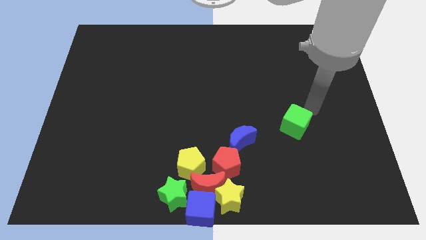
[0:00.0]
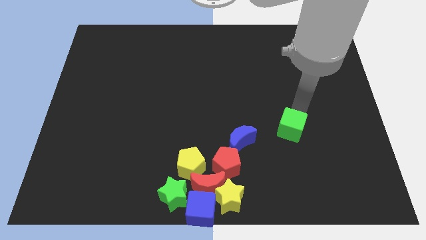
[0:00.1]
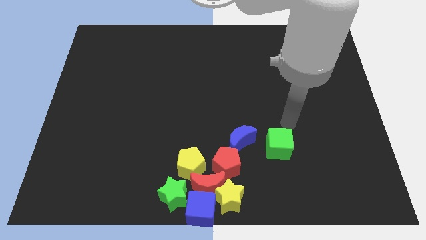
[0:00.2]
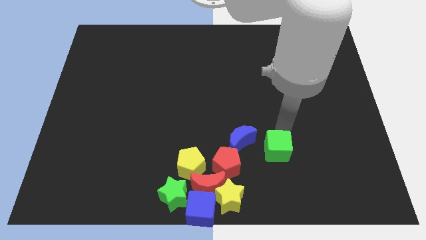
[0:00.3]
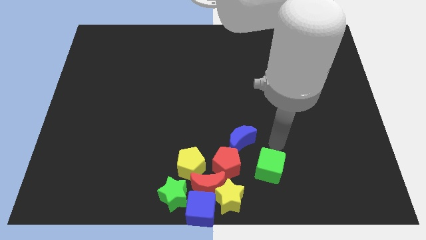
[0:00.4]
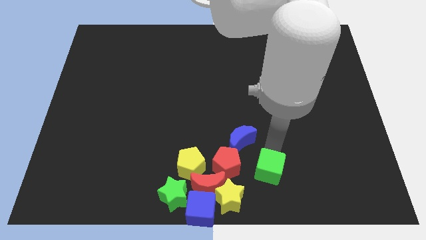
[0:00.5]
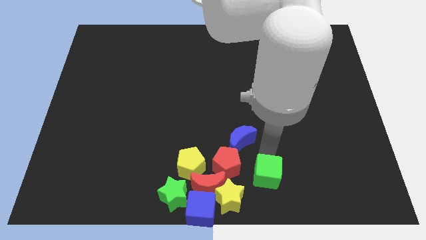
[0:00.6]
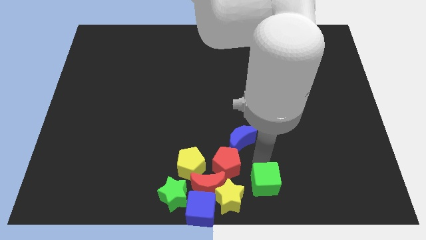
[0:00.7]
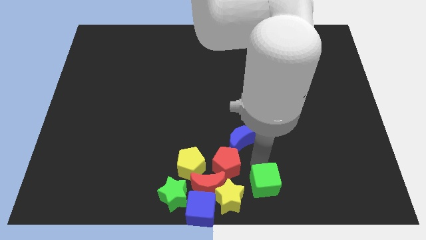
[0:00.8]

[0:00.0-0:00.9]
place green cube below blue crescent

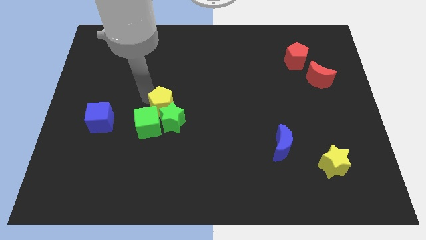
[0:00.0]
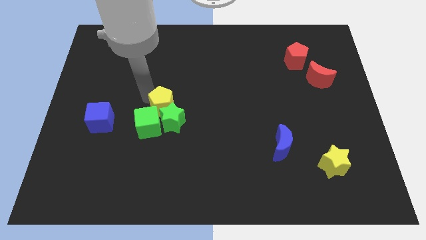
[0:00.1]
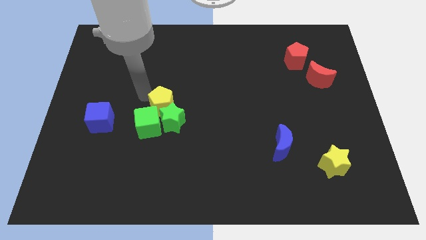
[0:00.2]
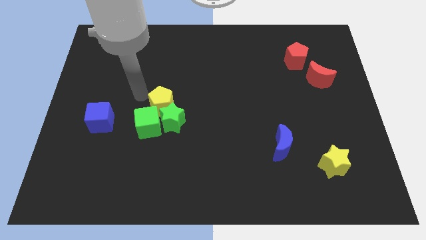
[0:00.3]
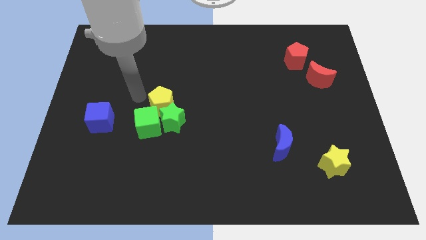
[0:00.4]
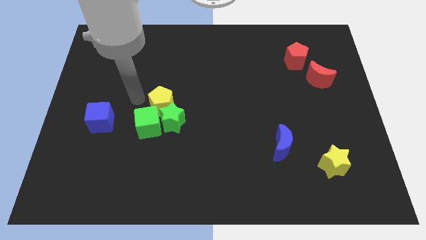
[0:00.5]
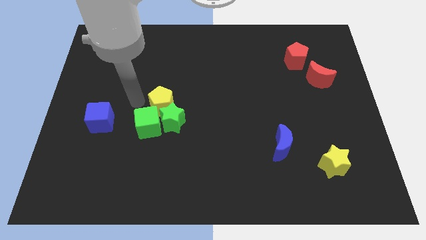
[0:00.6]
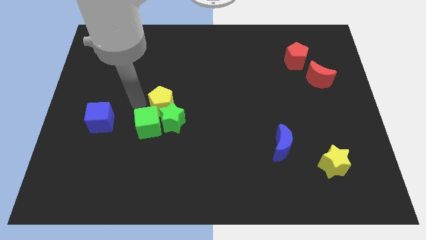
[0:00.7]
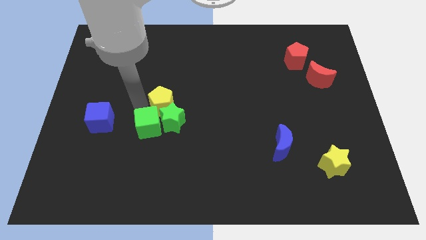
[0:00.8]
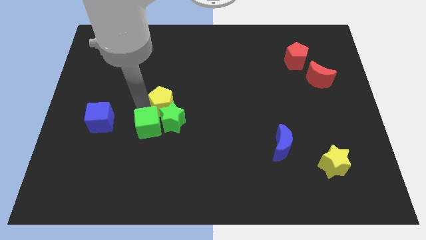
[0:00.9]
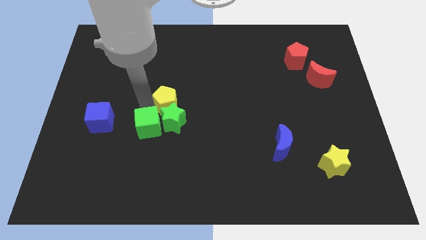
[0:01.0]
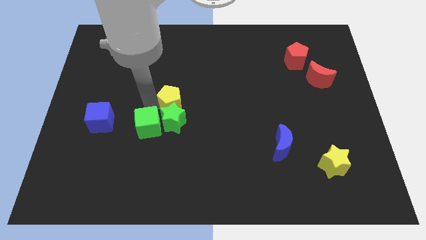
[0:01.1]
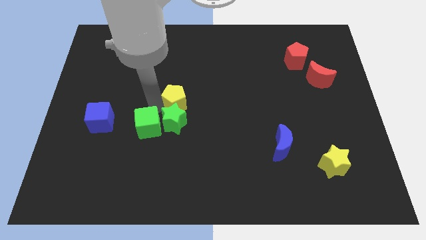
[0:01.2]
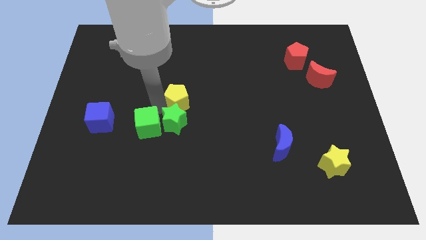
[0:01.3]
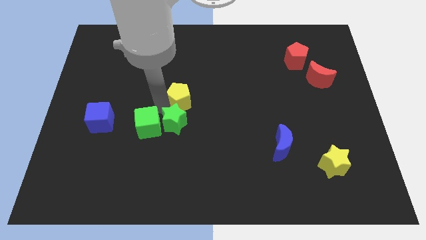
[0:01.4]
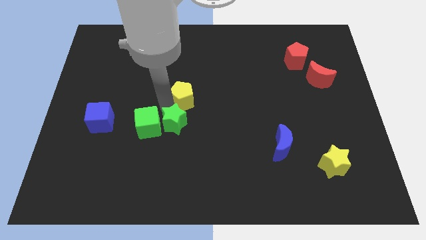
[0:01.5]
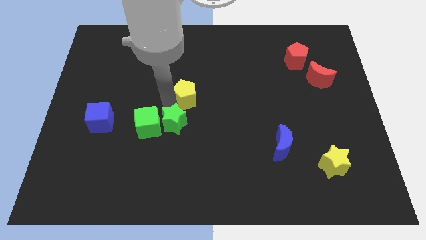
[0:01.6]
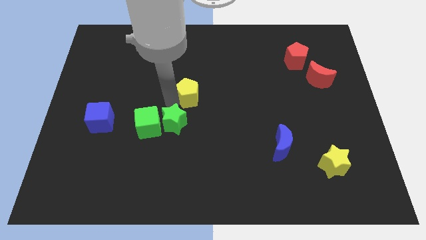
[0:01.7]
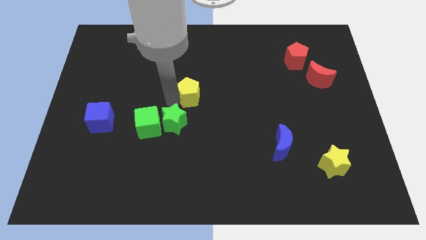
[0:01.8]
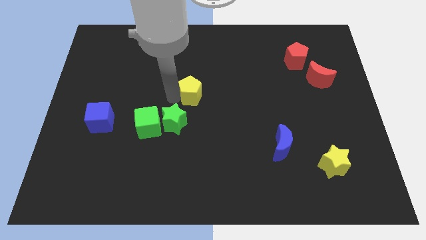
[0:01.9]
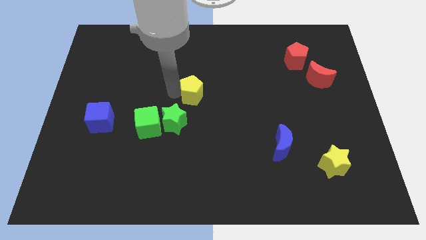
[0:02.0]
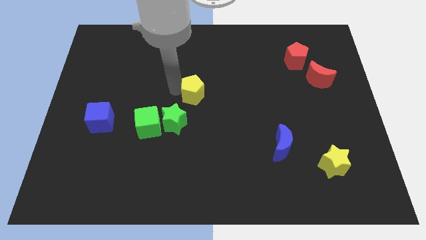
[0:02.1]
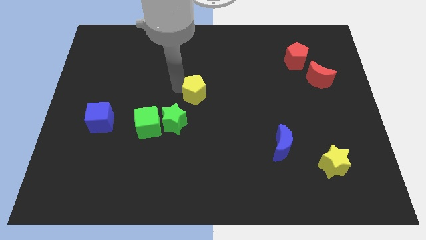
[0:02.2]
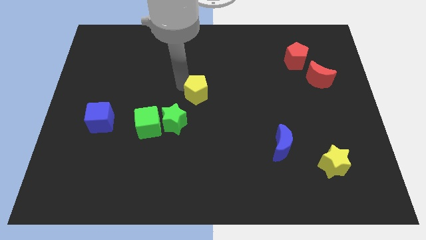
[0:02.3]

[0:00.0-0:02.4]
move the yellow pentagon towards the center

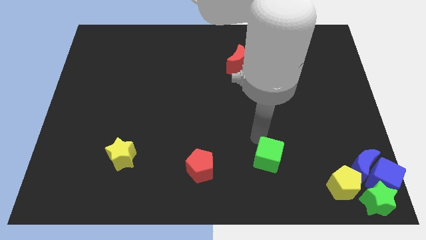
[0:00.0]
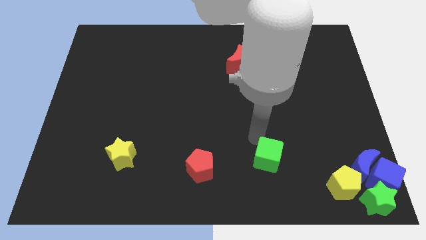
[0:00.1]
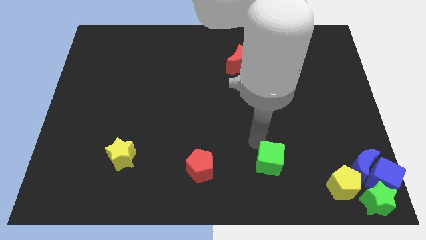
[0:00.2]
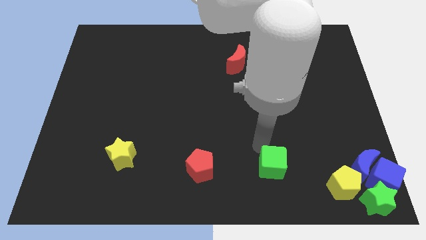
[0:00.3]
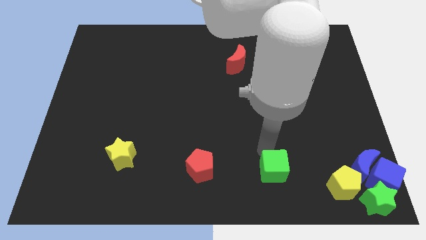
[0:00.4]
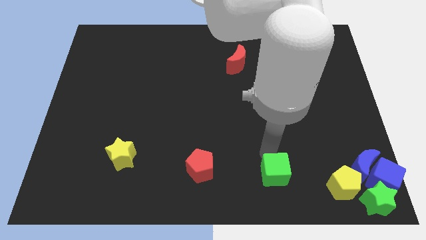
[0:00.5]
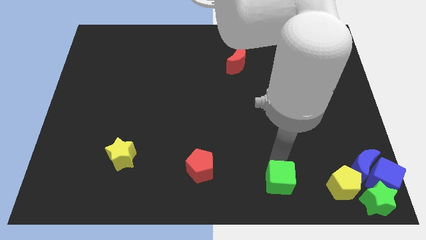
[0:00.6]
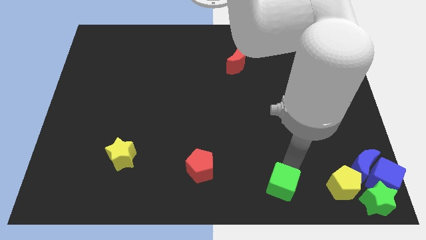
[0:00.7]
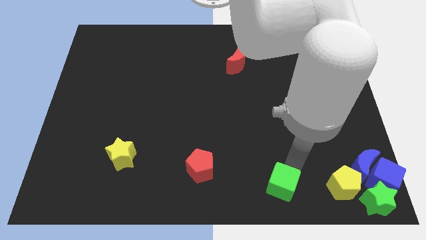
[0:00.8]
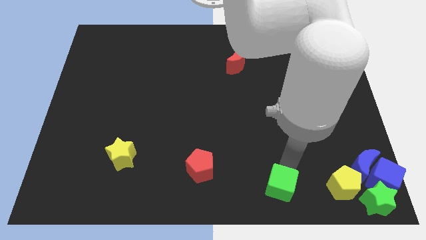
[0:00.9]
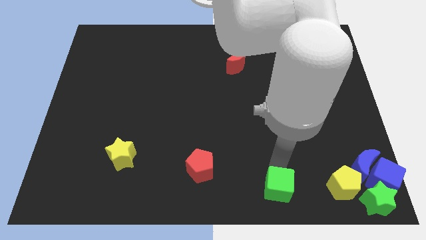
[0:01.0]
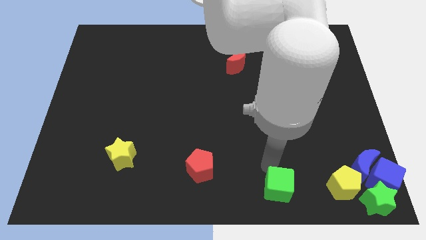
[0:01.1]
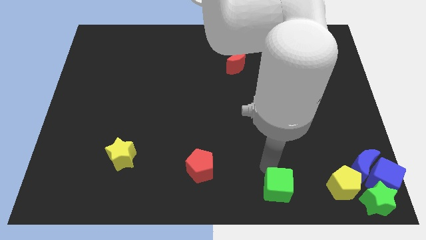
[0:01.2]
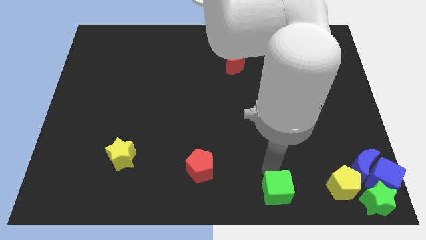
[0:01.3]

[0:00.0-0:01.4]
move the green cube diagonal to the left of the yellow pentagon

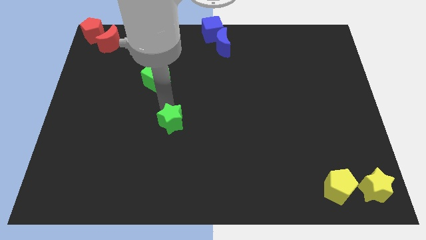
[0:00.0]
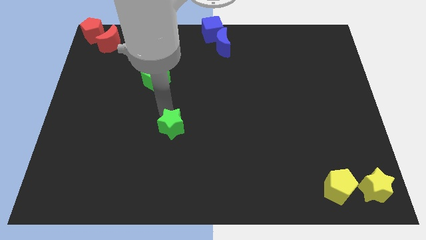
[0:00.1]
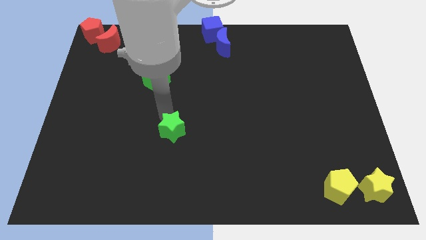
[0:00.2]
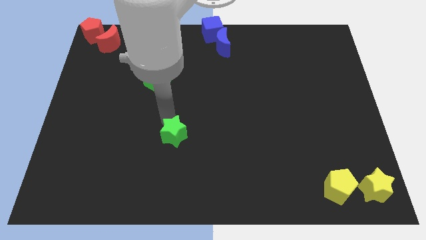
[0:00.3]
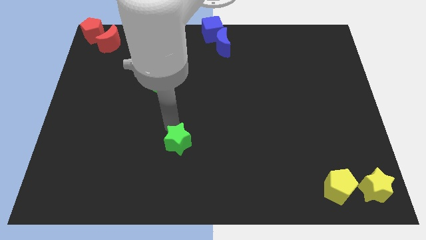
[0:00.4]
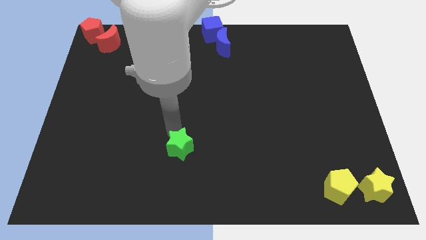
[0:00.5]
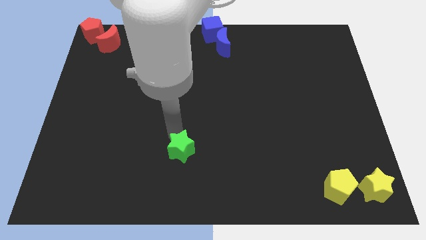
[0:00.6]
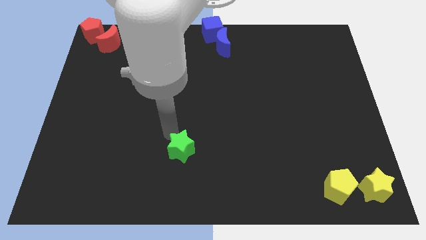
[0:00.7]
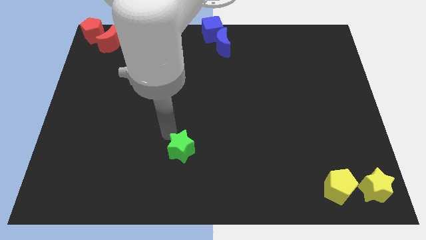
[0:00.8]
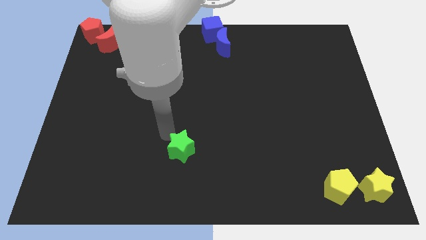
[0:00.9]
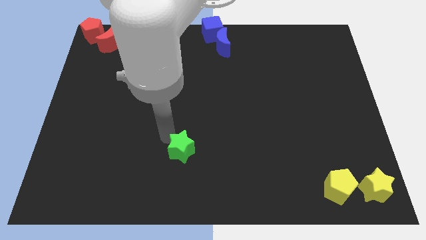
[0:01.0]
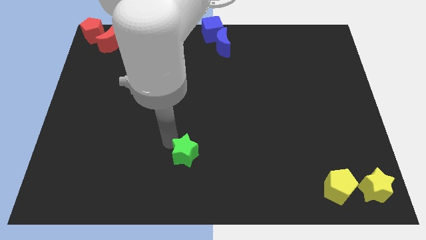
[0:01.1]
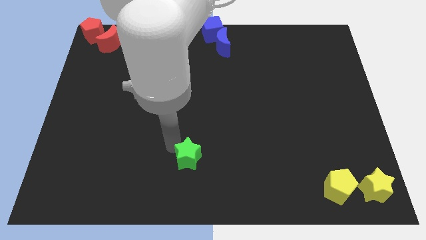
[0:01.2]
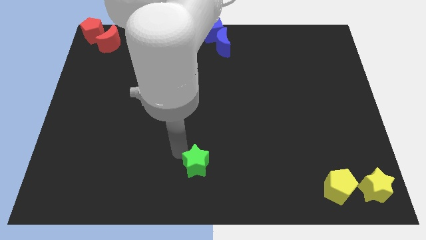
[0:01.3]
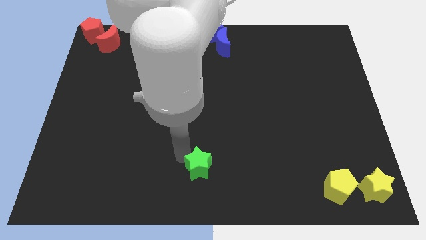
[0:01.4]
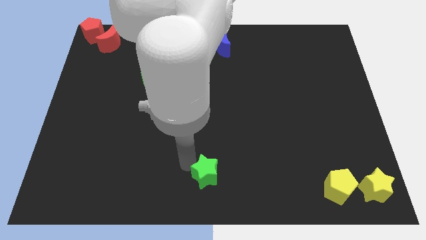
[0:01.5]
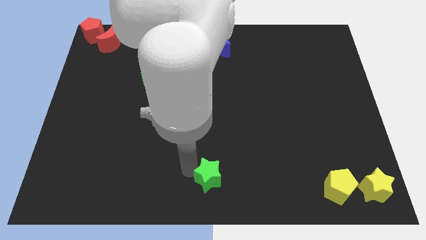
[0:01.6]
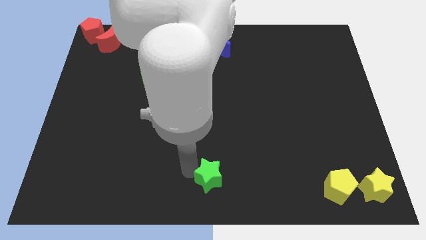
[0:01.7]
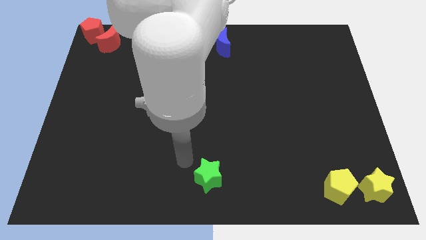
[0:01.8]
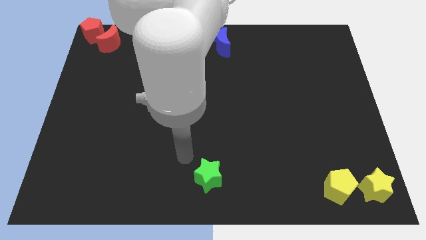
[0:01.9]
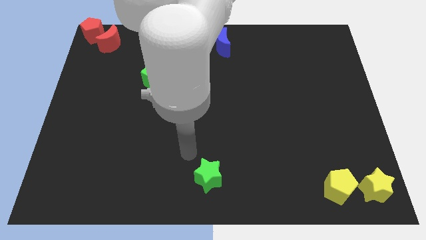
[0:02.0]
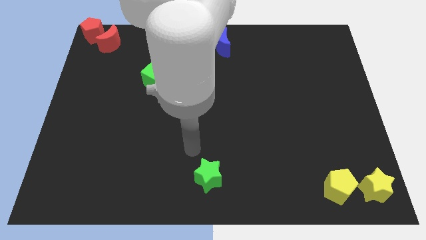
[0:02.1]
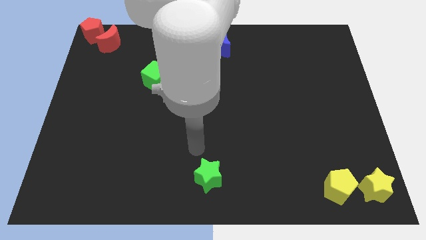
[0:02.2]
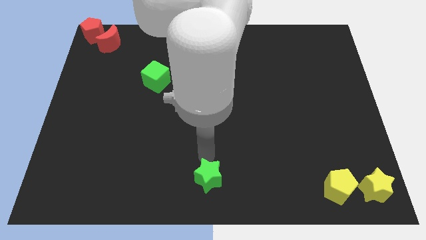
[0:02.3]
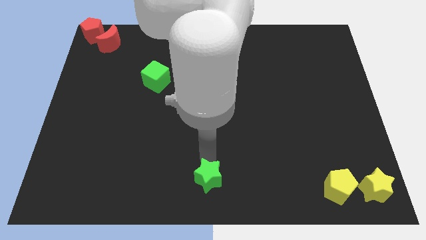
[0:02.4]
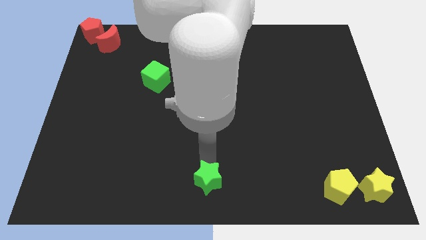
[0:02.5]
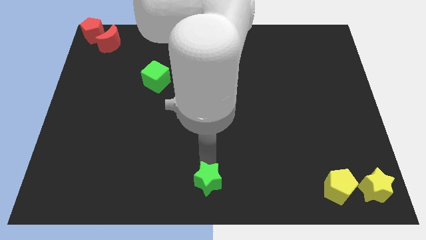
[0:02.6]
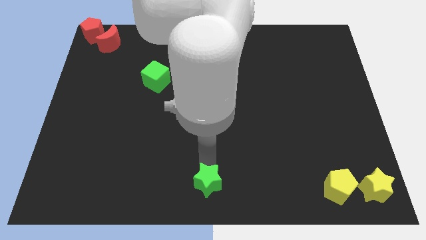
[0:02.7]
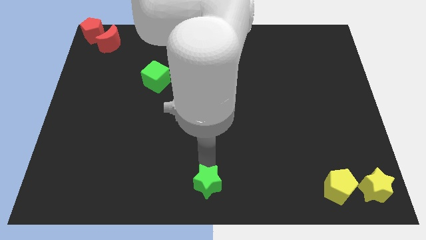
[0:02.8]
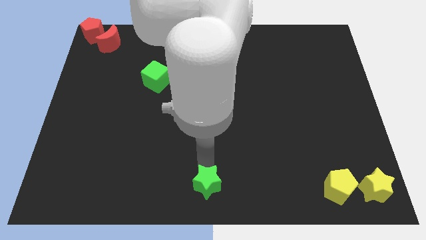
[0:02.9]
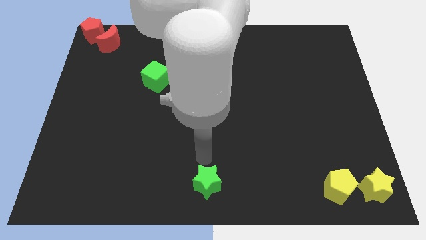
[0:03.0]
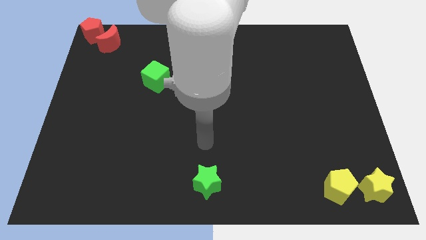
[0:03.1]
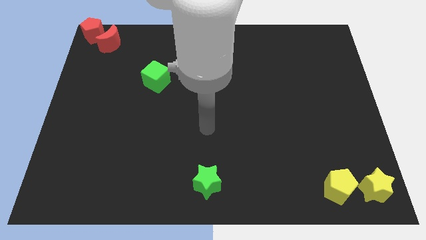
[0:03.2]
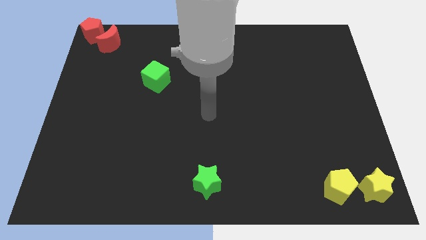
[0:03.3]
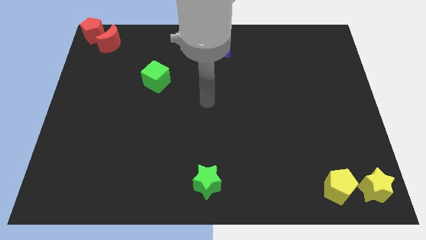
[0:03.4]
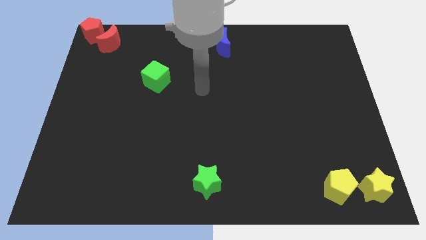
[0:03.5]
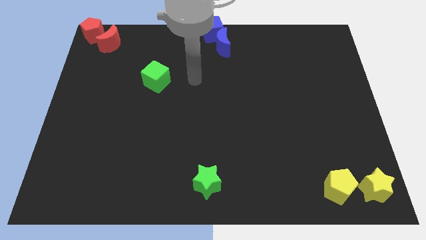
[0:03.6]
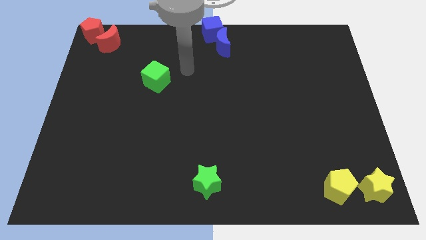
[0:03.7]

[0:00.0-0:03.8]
move green star to the bottom of the board

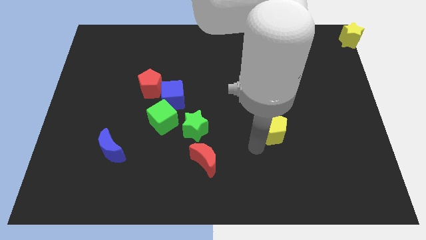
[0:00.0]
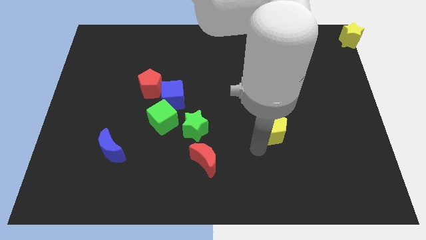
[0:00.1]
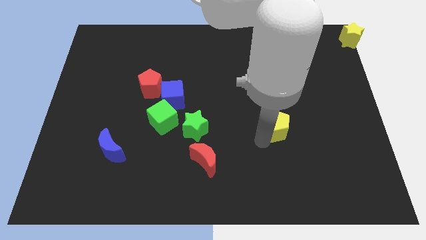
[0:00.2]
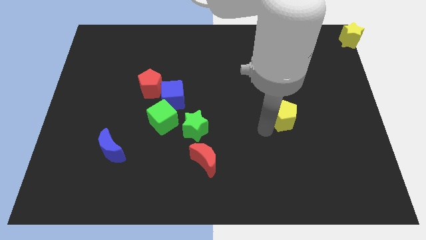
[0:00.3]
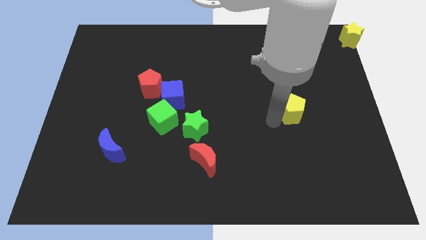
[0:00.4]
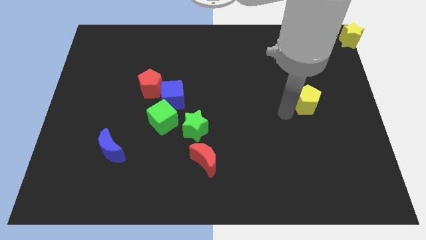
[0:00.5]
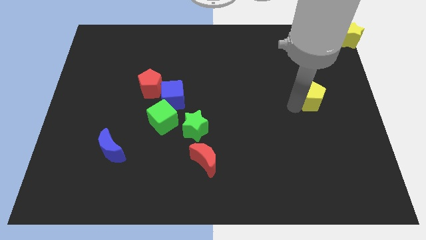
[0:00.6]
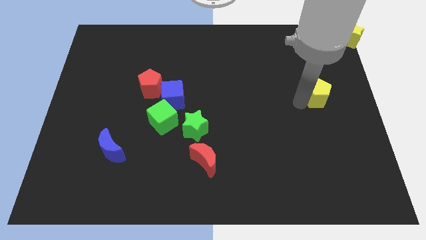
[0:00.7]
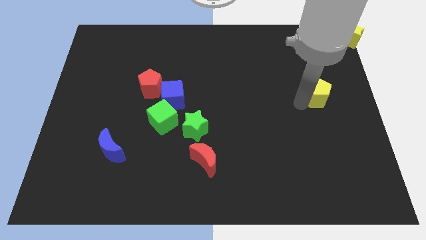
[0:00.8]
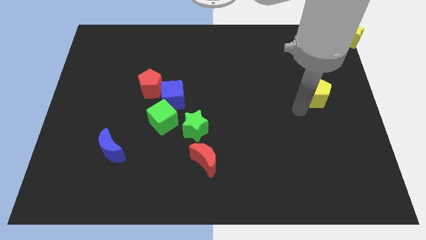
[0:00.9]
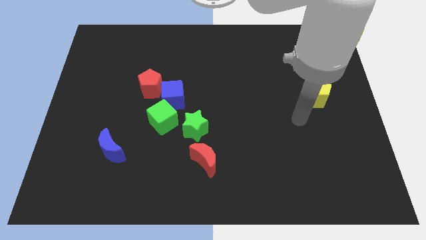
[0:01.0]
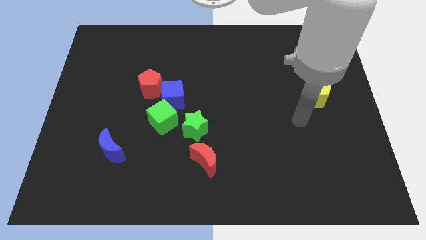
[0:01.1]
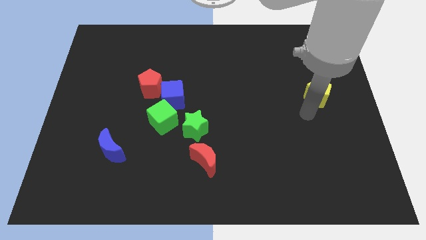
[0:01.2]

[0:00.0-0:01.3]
move the yellow pentagon to the right of the blue cube
